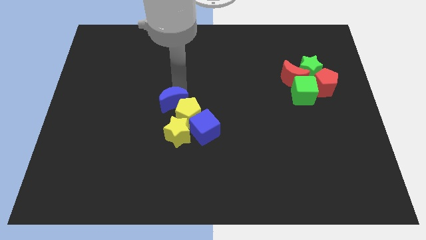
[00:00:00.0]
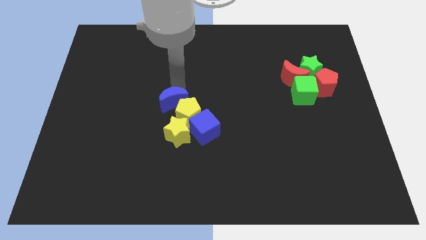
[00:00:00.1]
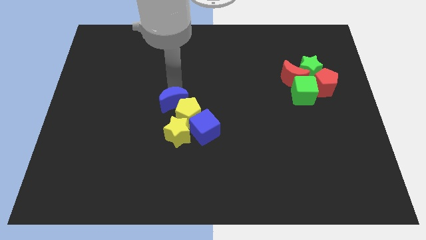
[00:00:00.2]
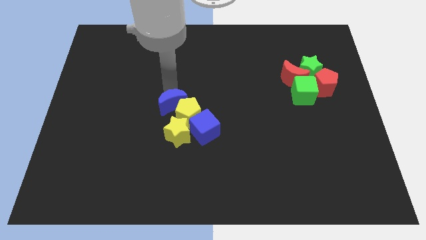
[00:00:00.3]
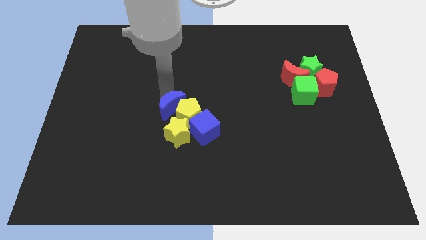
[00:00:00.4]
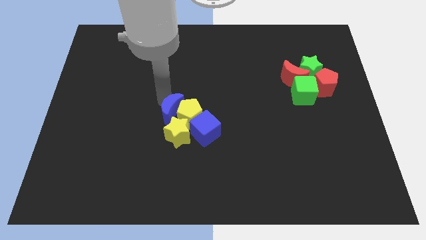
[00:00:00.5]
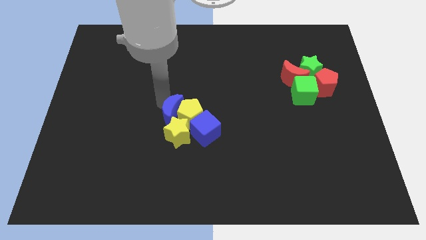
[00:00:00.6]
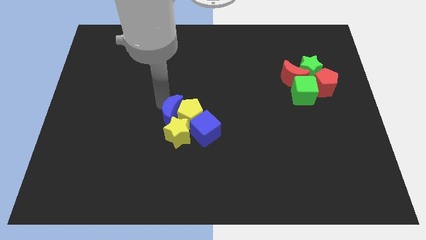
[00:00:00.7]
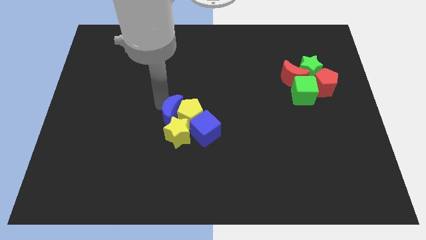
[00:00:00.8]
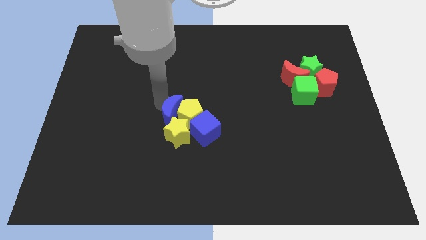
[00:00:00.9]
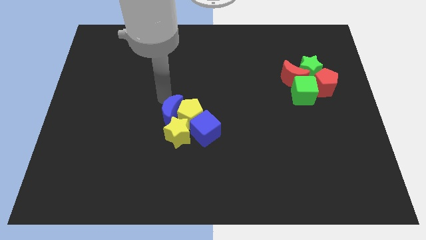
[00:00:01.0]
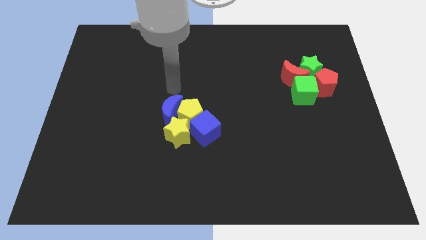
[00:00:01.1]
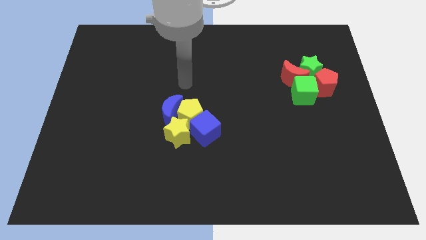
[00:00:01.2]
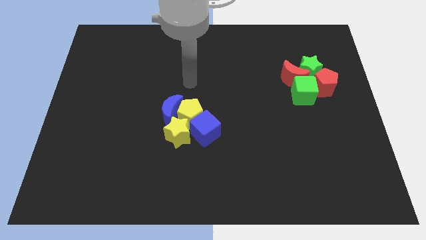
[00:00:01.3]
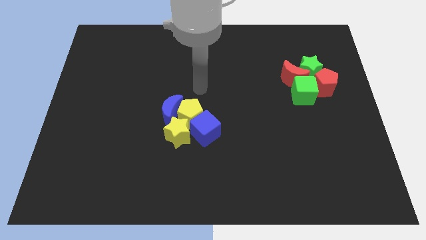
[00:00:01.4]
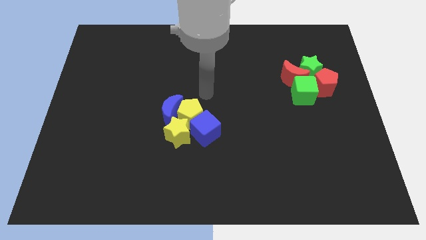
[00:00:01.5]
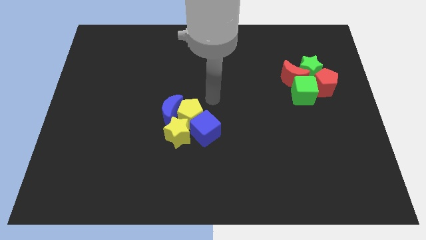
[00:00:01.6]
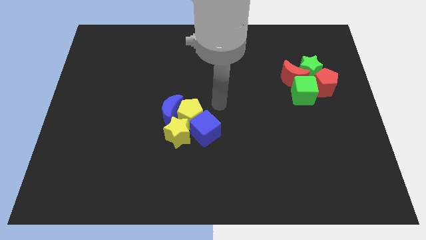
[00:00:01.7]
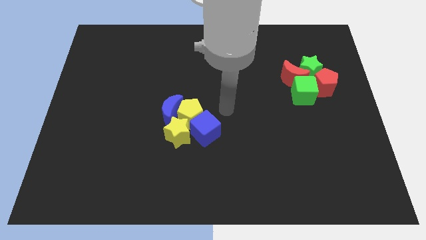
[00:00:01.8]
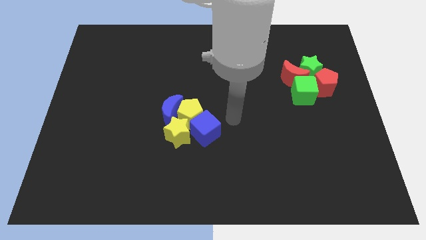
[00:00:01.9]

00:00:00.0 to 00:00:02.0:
push blue moon in to yellow pentagon

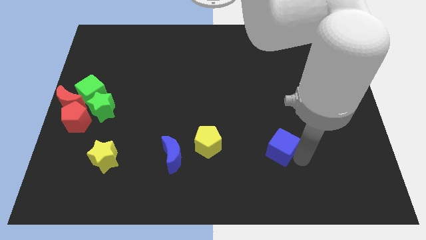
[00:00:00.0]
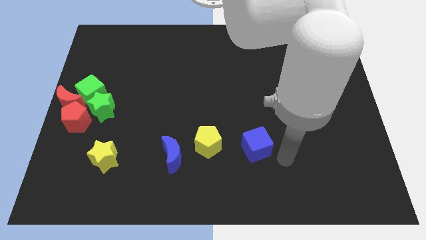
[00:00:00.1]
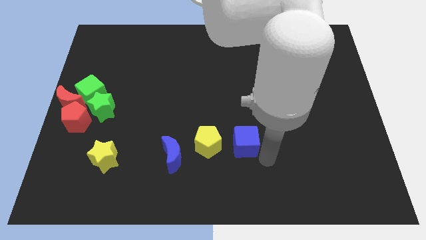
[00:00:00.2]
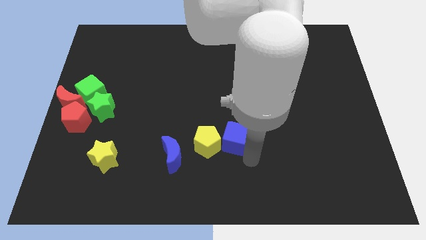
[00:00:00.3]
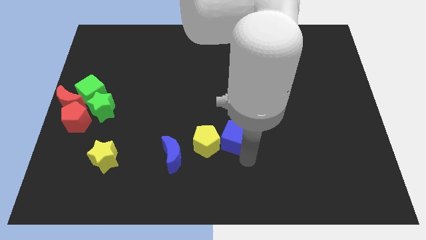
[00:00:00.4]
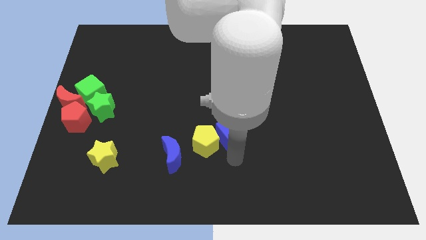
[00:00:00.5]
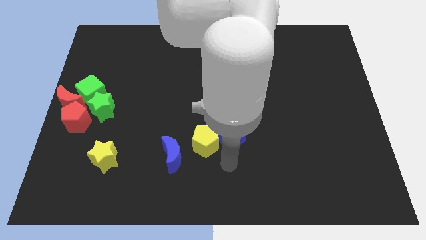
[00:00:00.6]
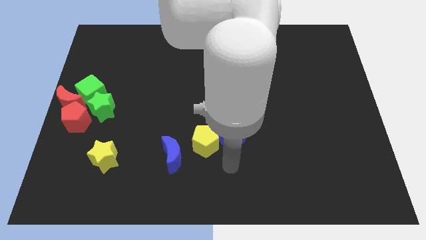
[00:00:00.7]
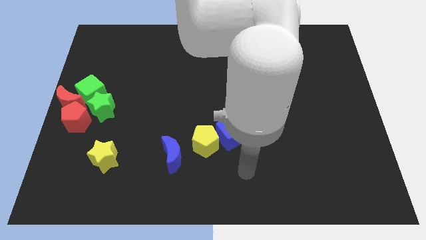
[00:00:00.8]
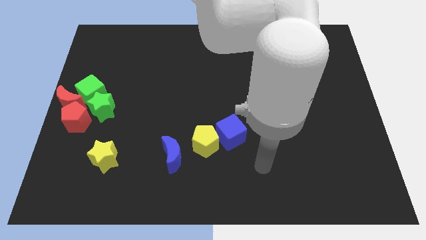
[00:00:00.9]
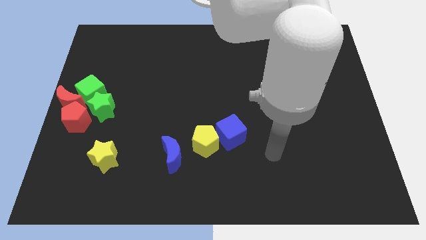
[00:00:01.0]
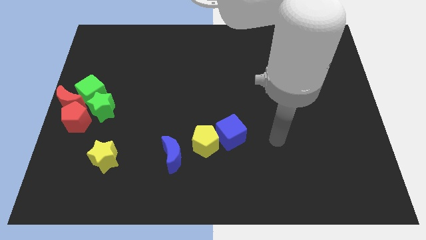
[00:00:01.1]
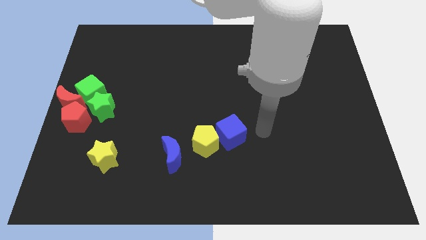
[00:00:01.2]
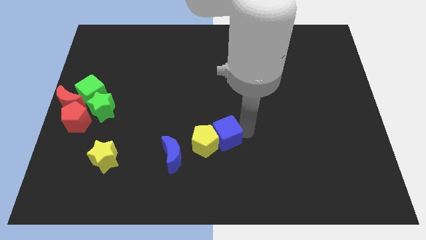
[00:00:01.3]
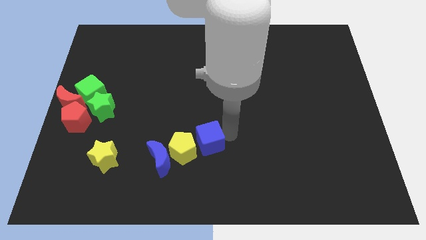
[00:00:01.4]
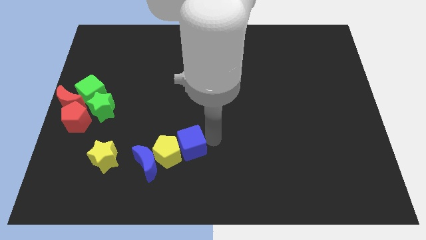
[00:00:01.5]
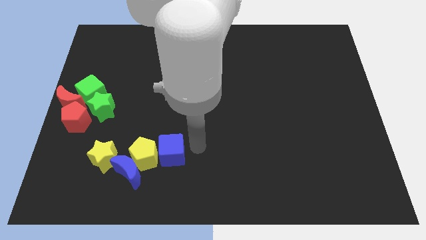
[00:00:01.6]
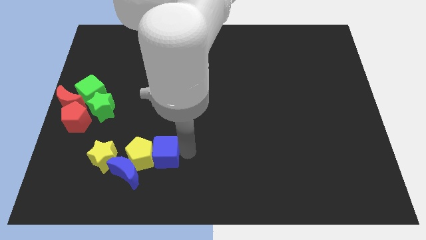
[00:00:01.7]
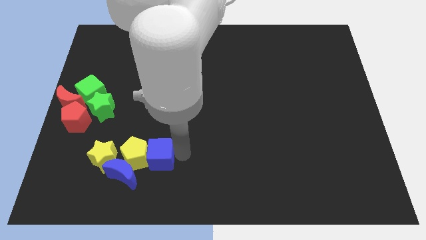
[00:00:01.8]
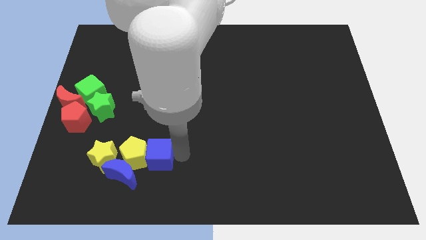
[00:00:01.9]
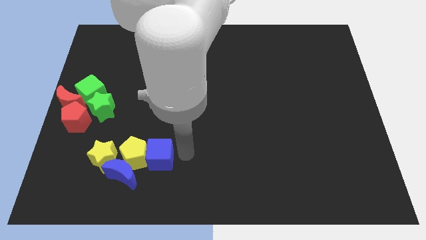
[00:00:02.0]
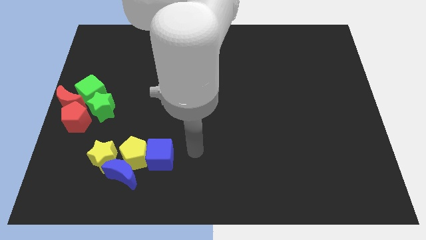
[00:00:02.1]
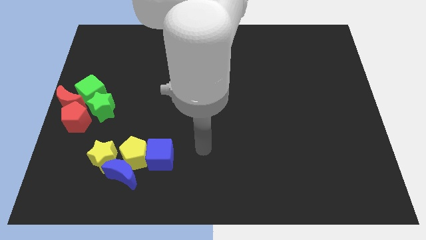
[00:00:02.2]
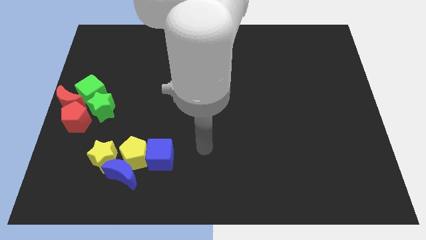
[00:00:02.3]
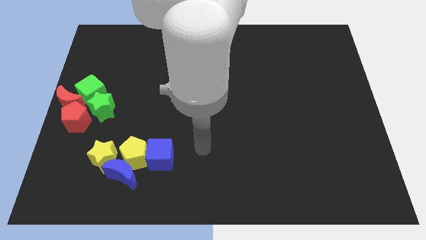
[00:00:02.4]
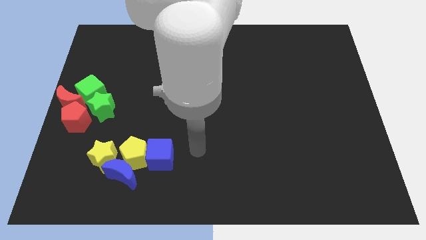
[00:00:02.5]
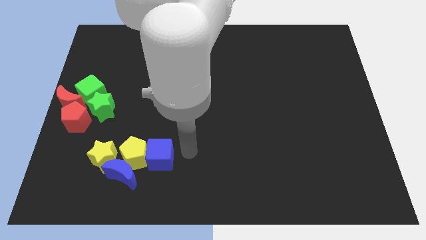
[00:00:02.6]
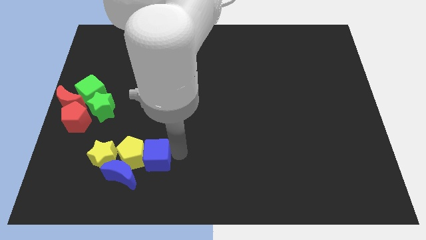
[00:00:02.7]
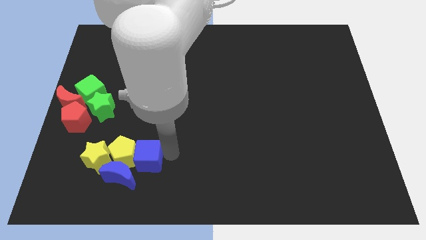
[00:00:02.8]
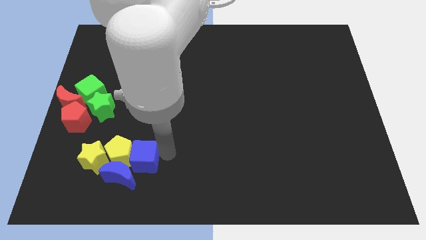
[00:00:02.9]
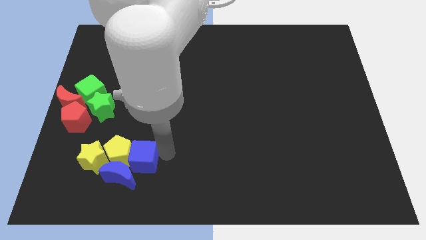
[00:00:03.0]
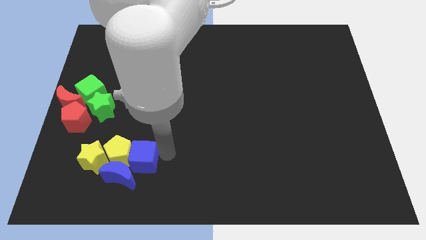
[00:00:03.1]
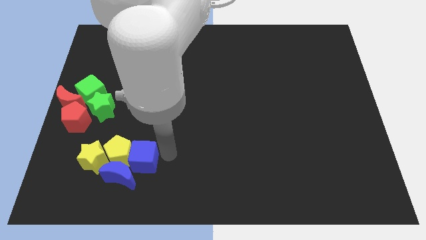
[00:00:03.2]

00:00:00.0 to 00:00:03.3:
push the blue yellow blocks with the blue cube

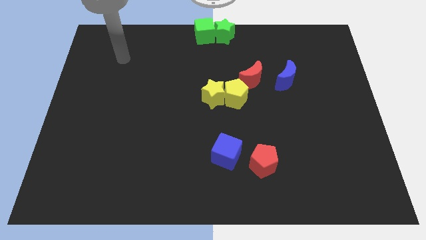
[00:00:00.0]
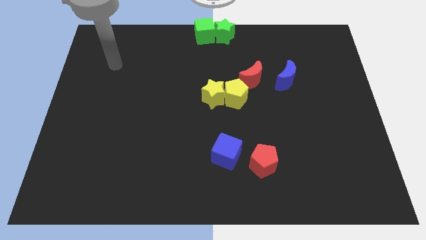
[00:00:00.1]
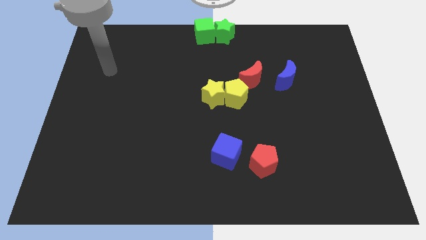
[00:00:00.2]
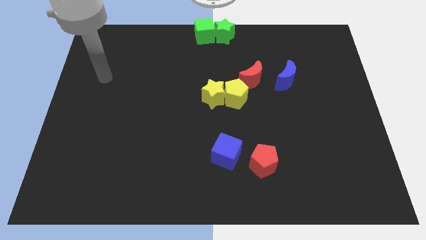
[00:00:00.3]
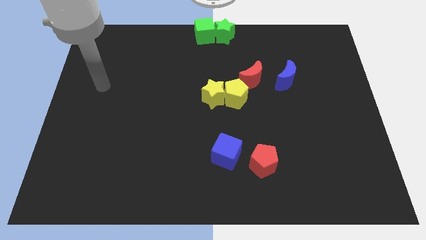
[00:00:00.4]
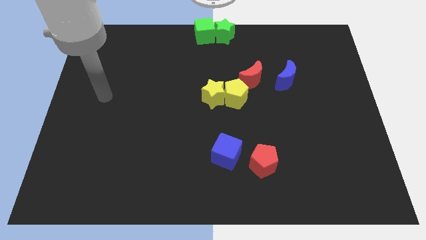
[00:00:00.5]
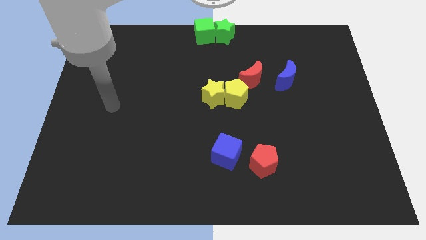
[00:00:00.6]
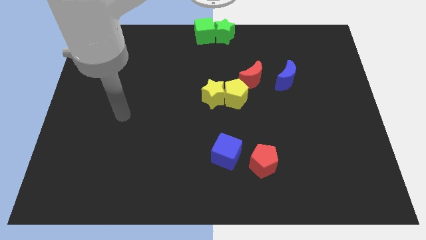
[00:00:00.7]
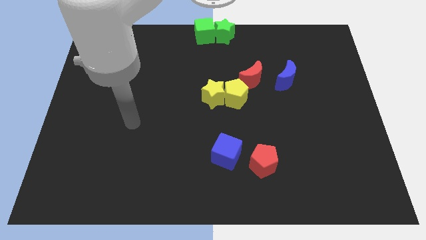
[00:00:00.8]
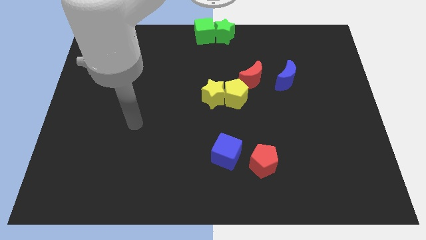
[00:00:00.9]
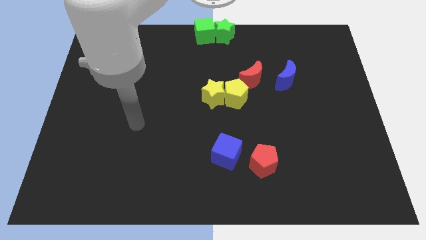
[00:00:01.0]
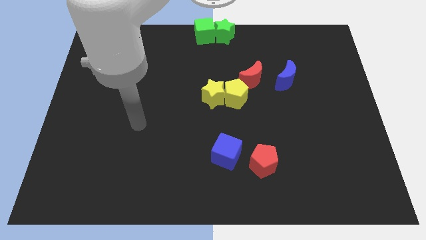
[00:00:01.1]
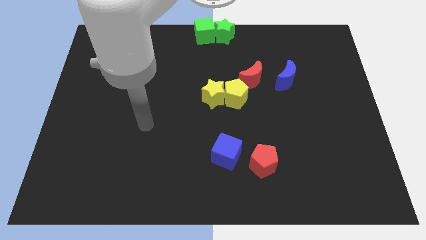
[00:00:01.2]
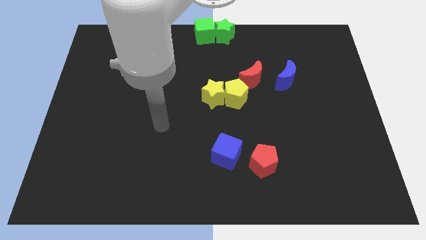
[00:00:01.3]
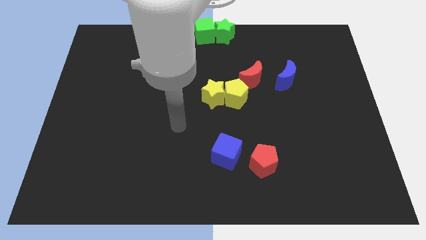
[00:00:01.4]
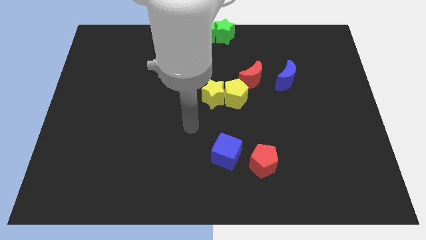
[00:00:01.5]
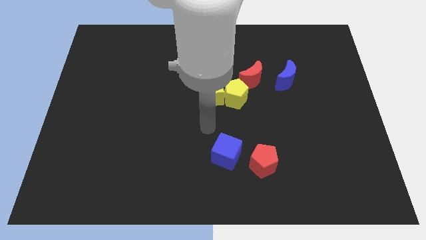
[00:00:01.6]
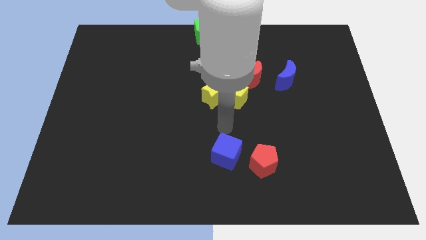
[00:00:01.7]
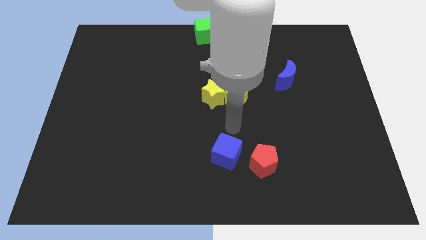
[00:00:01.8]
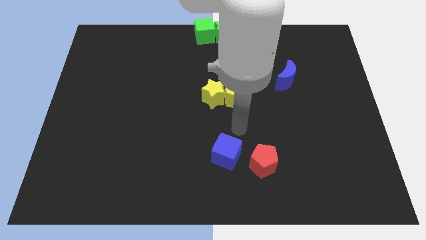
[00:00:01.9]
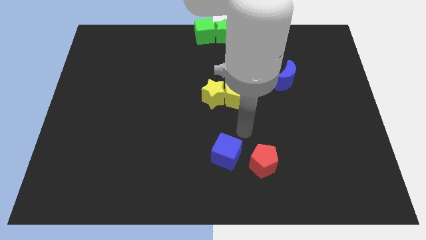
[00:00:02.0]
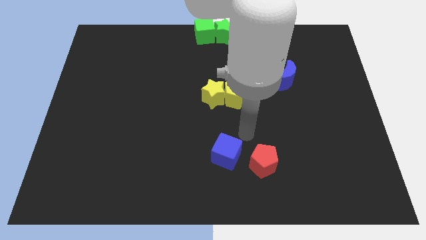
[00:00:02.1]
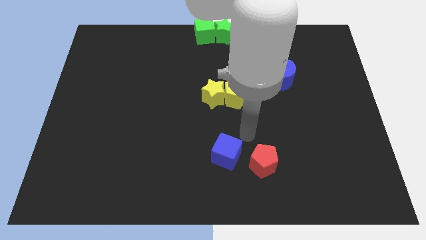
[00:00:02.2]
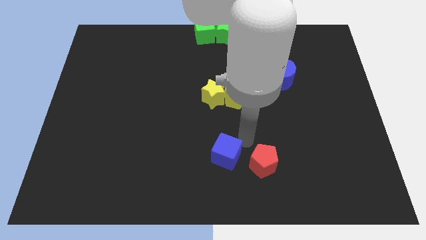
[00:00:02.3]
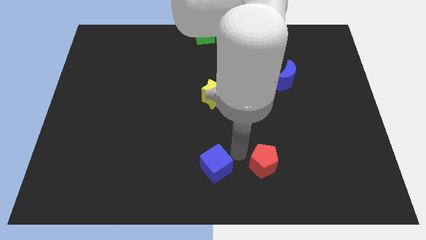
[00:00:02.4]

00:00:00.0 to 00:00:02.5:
place your arm to the top of the blue block

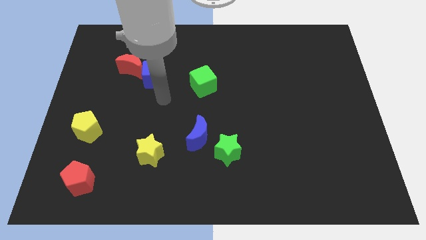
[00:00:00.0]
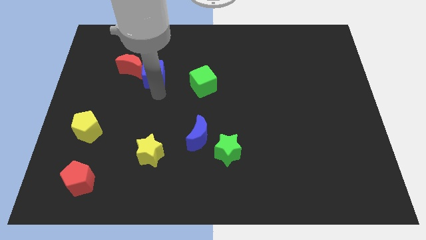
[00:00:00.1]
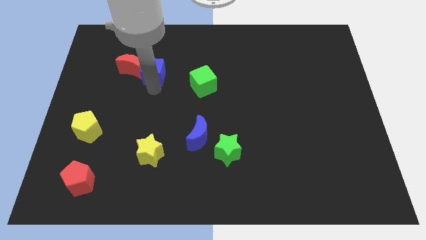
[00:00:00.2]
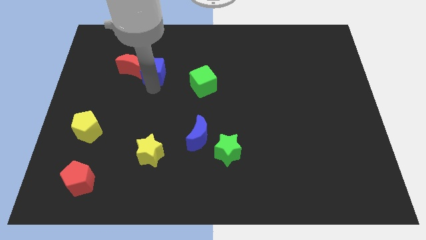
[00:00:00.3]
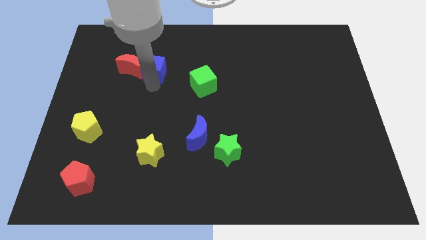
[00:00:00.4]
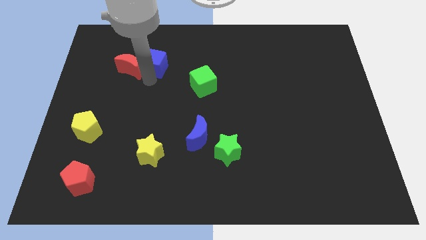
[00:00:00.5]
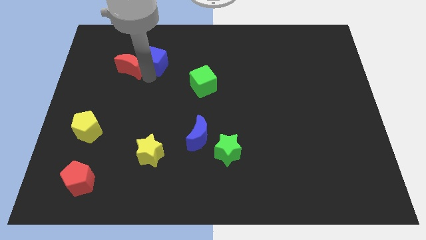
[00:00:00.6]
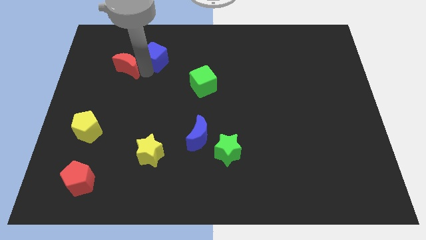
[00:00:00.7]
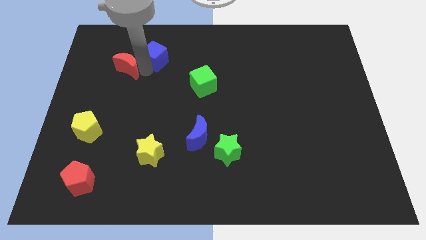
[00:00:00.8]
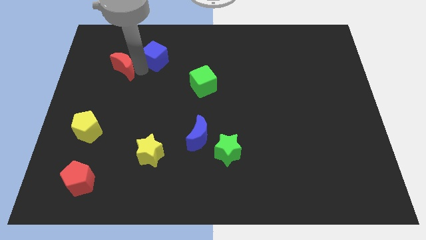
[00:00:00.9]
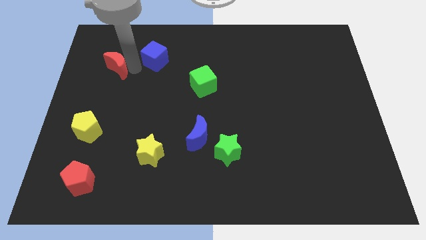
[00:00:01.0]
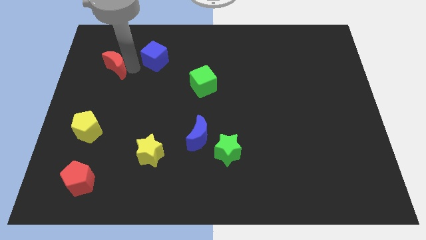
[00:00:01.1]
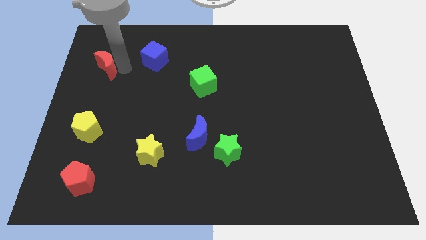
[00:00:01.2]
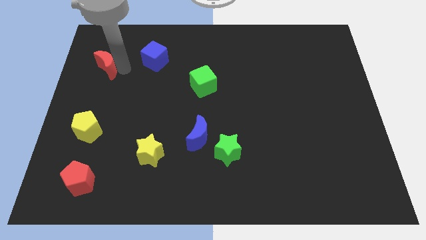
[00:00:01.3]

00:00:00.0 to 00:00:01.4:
separate the red moon and blue cube
